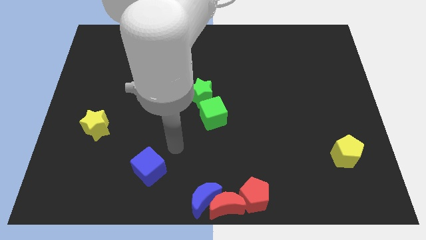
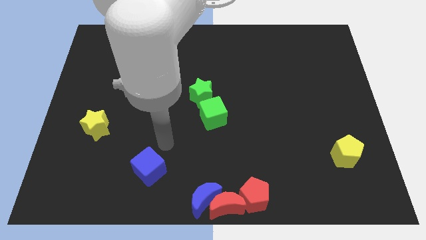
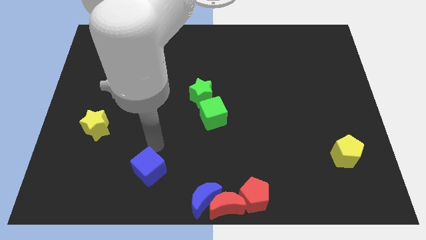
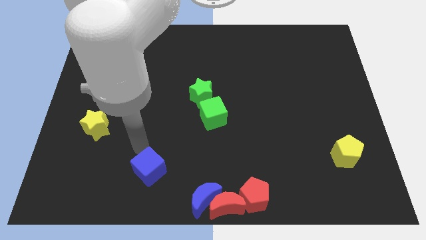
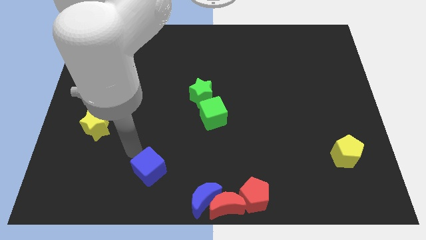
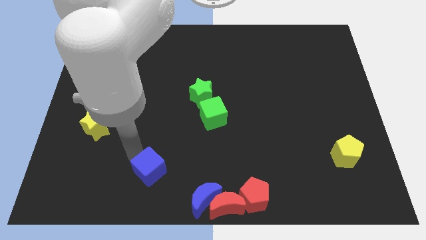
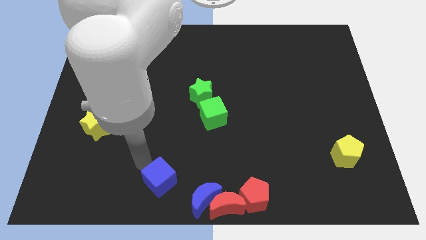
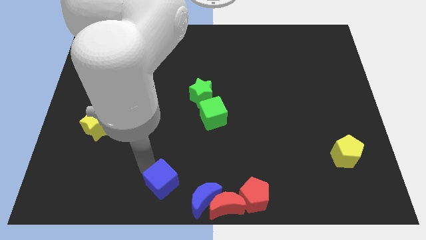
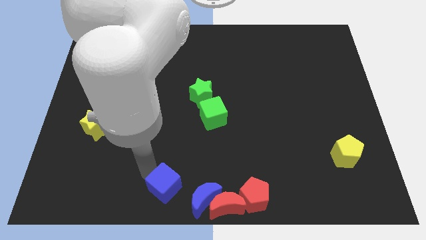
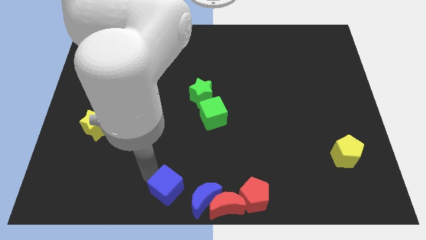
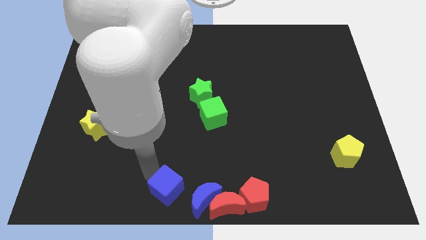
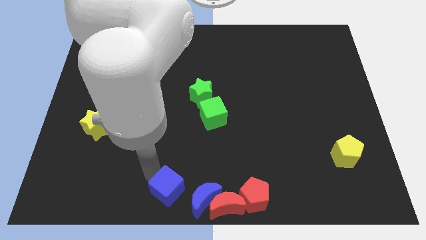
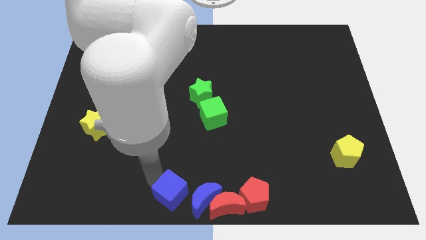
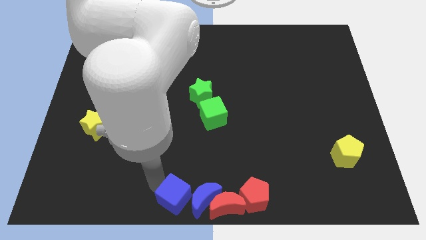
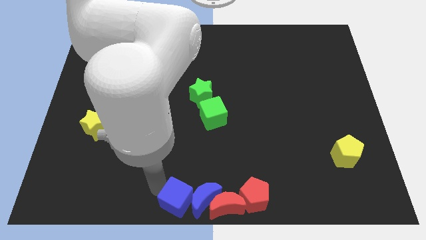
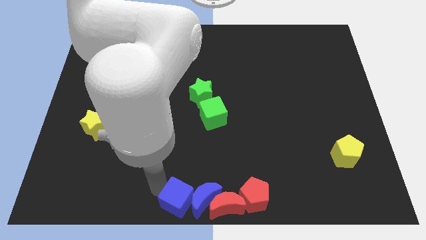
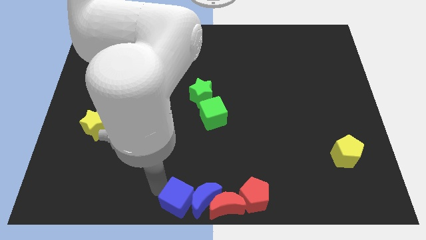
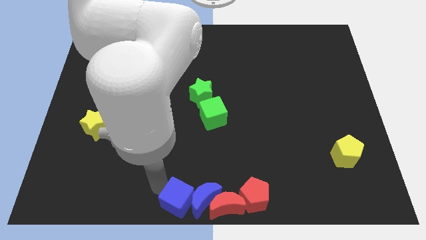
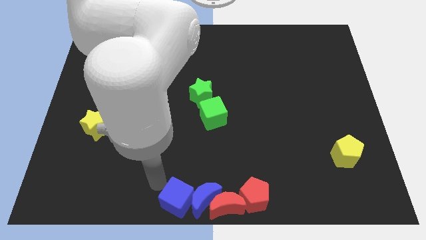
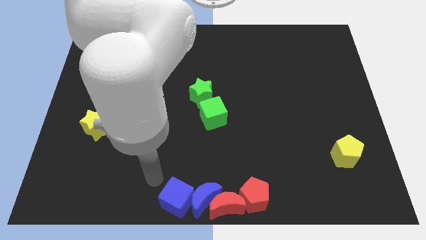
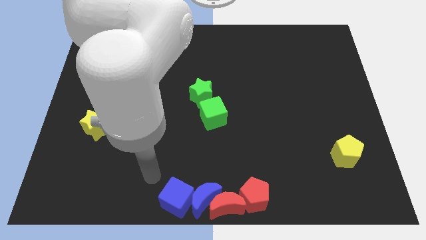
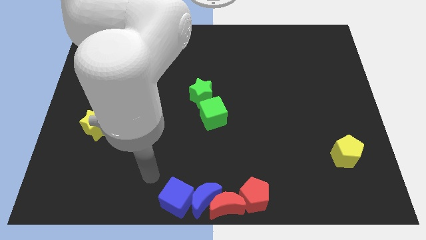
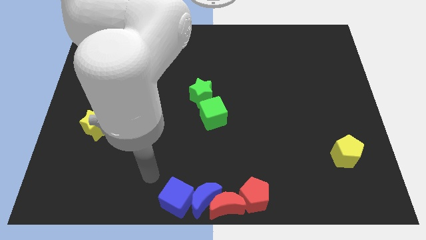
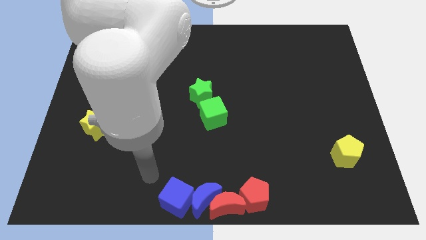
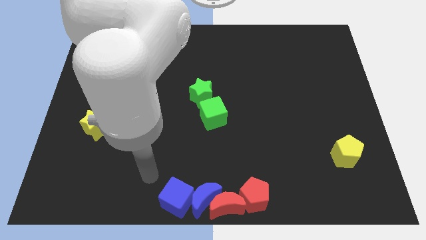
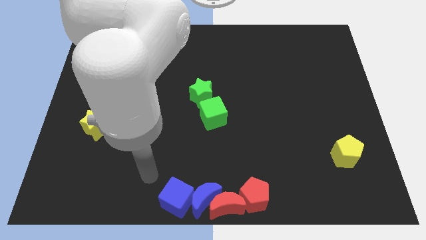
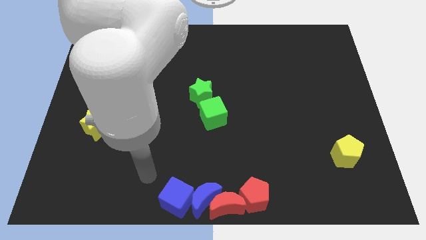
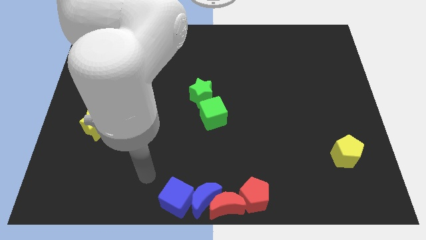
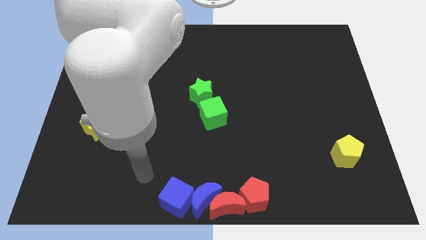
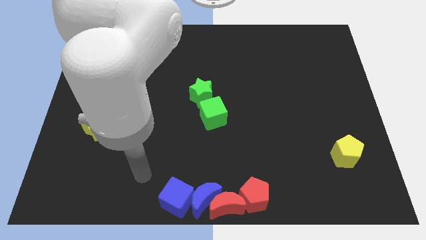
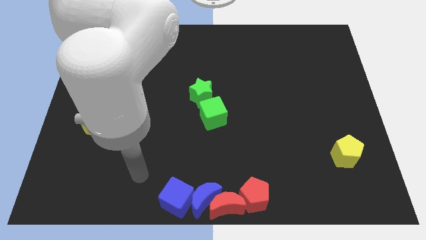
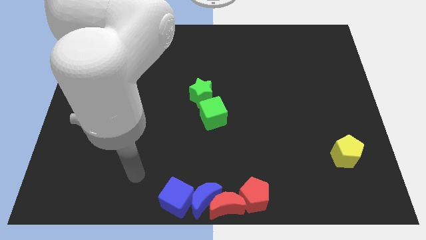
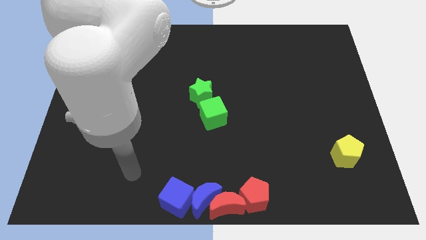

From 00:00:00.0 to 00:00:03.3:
place the blue cube towards the left side of the blue crescent

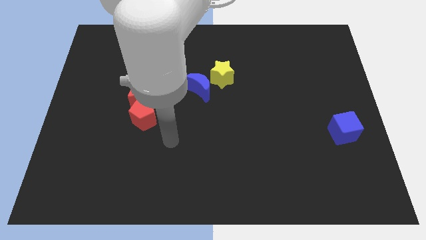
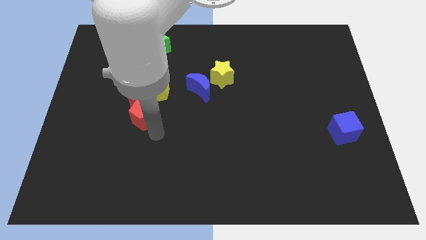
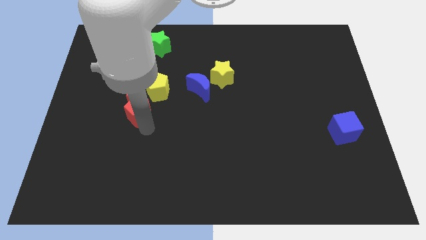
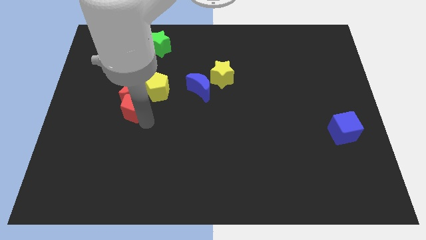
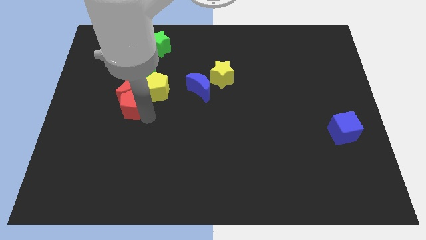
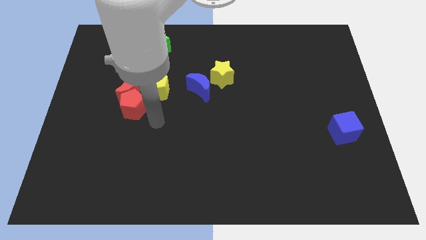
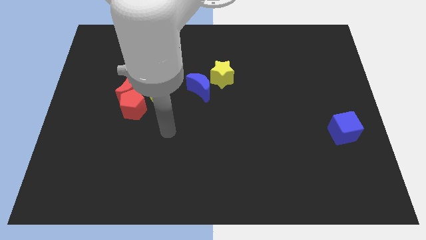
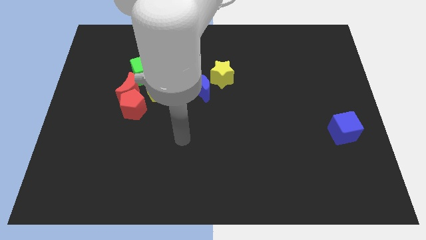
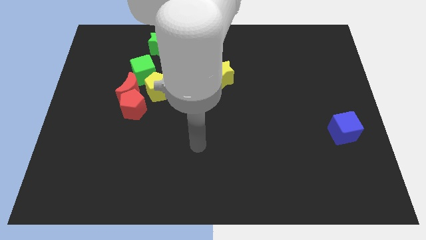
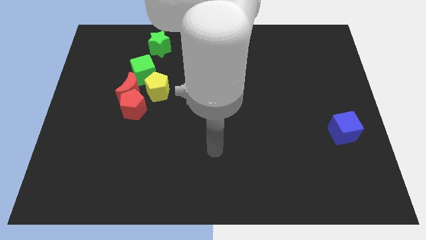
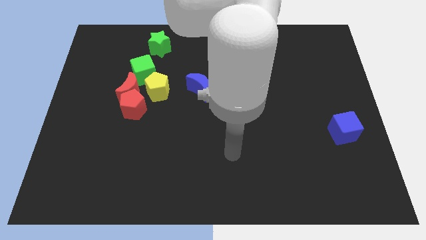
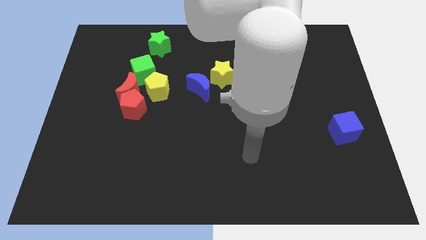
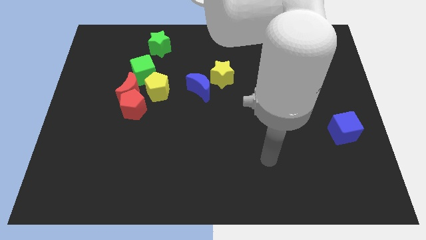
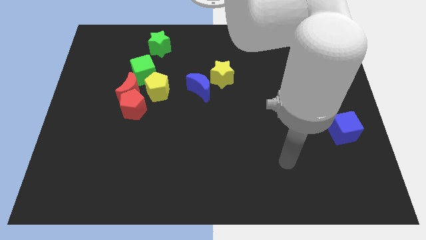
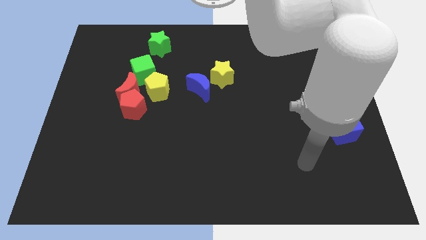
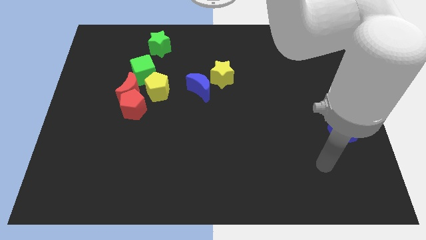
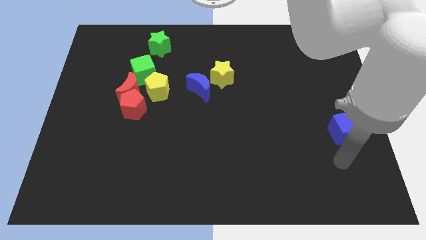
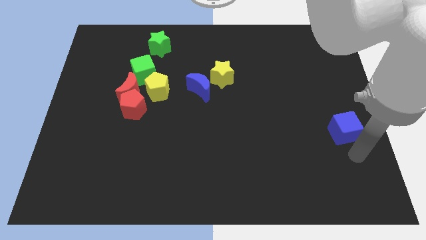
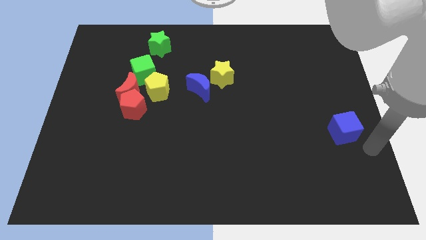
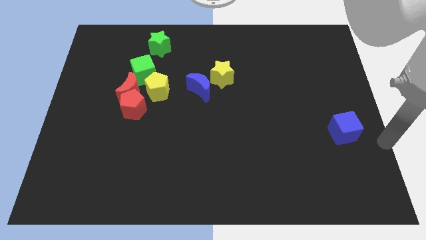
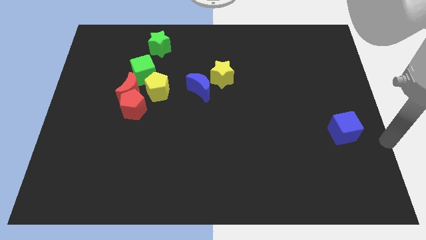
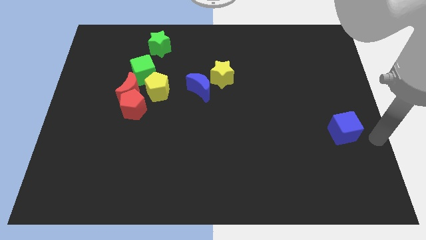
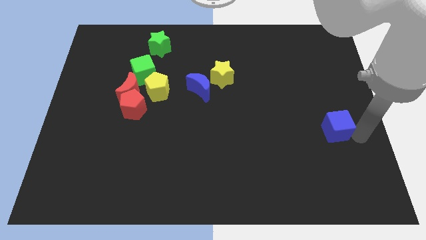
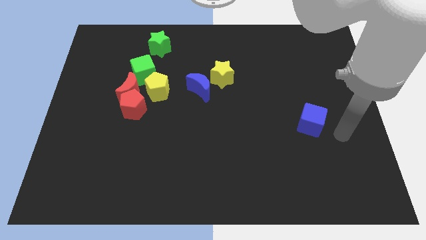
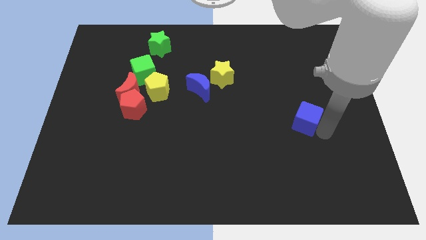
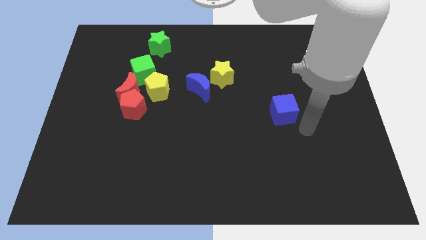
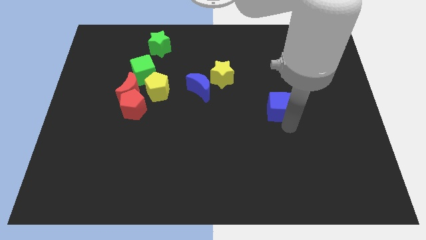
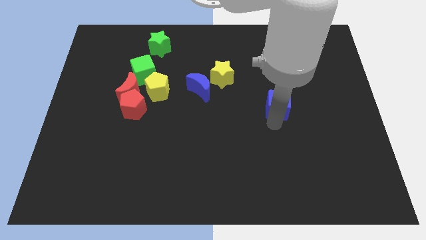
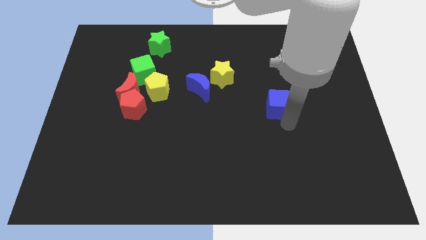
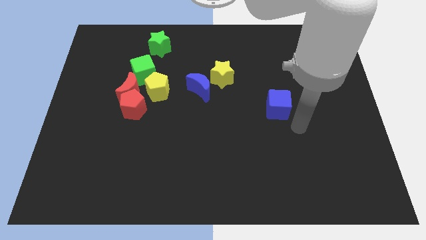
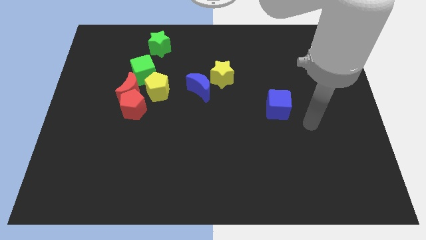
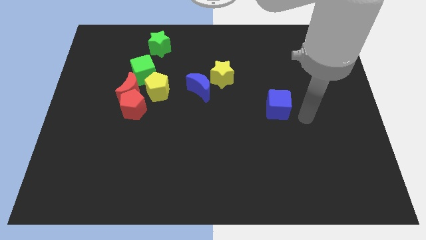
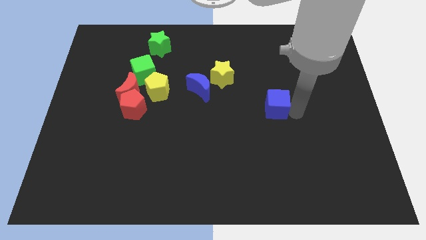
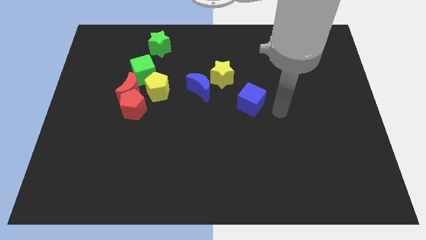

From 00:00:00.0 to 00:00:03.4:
push the blue cube towards the blue moon

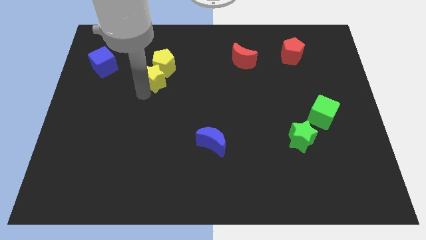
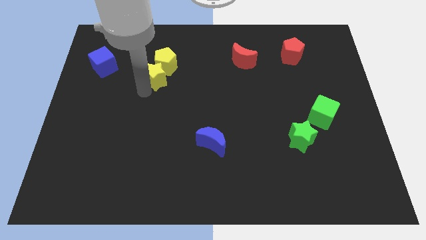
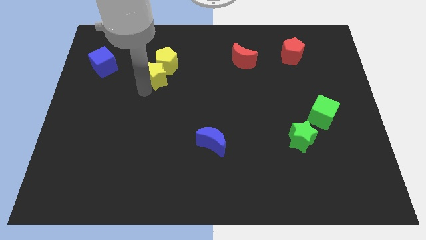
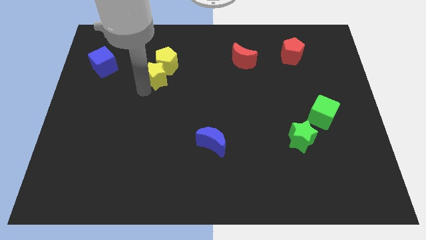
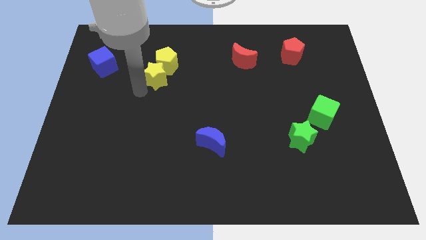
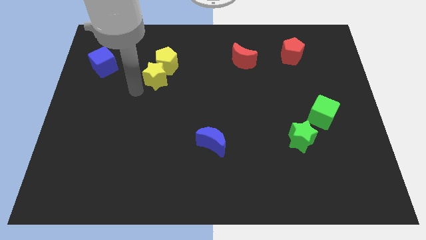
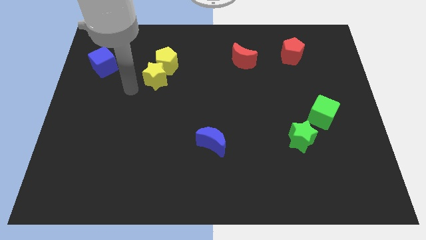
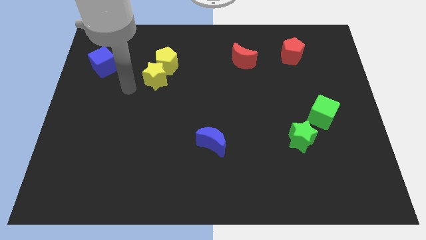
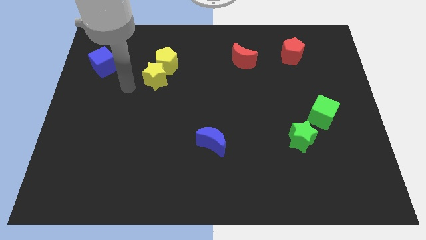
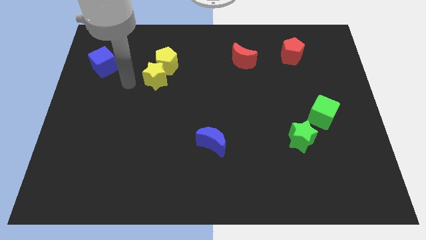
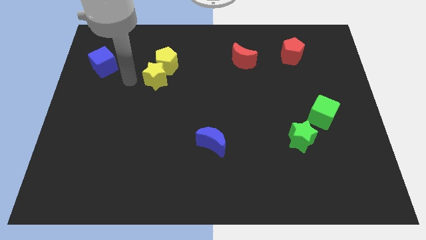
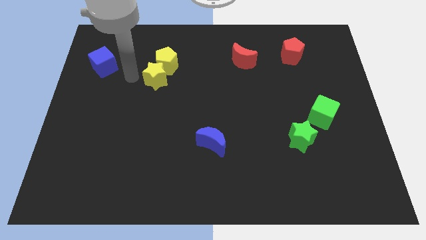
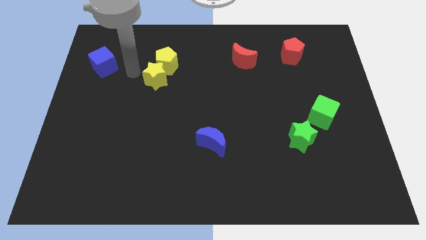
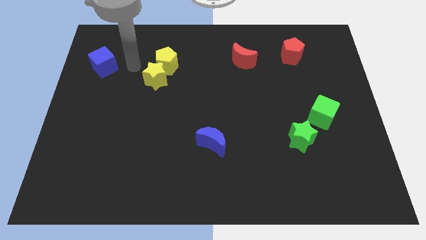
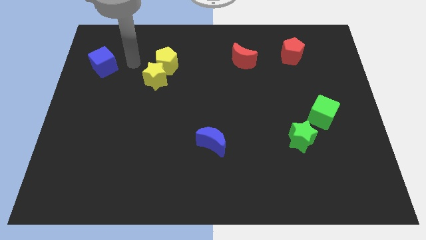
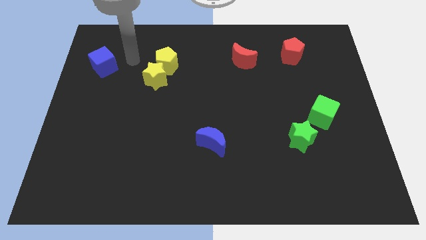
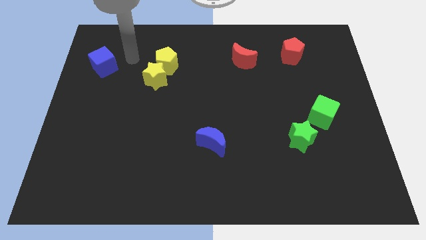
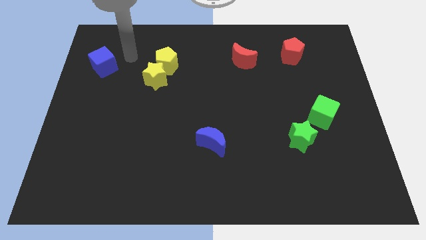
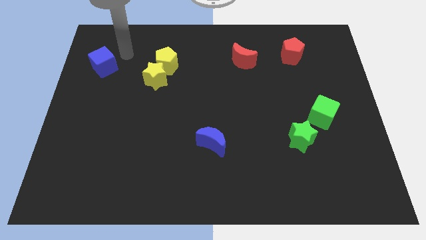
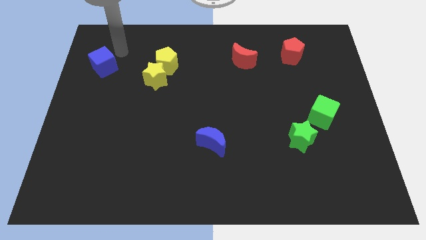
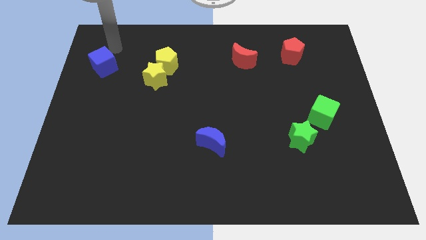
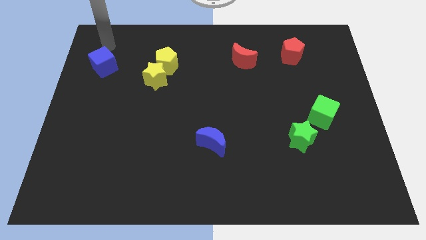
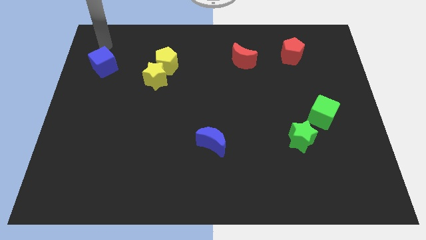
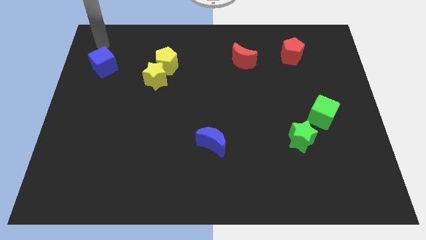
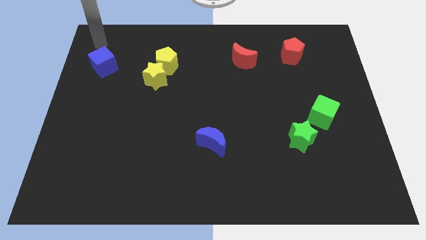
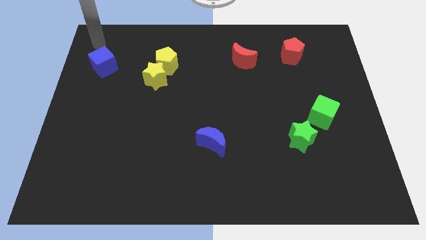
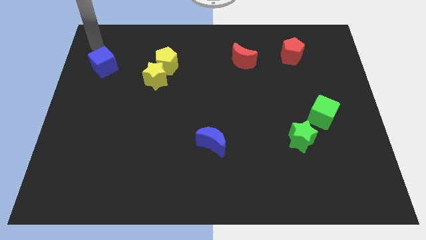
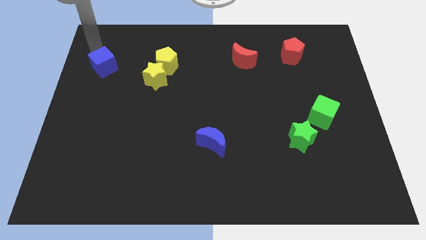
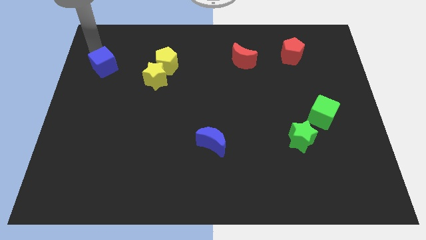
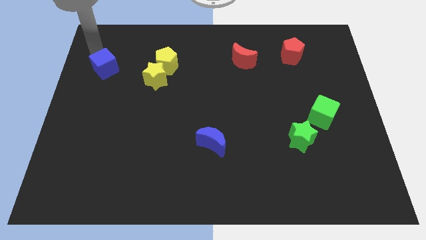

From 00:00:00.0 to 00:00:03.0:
place the arm diagonally to the blue cube
